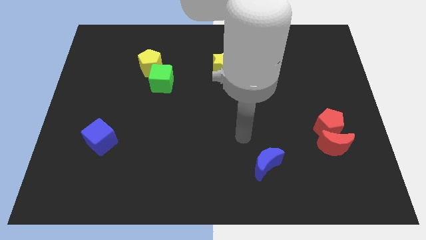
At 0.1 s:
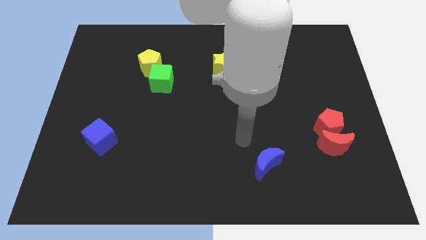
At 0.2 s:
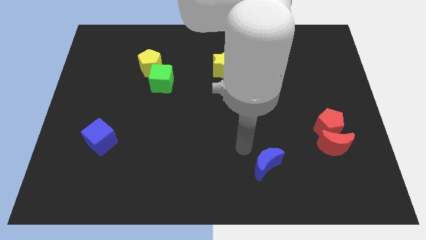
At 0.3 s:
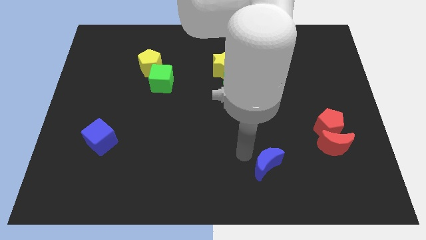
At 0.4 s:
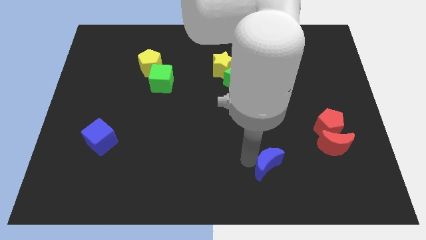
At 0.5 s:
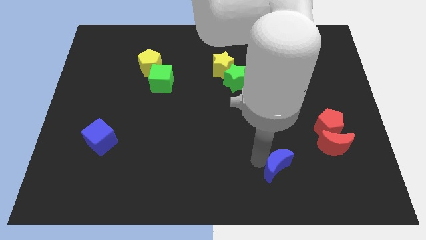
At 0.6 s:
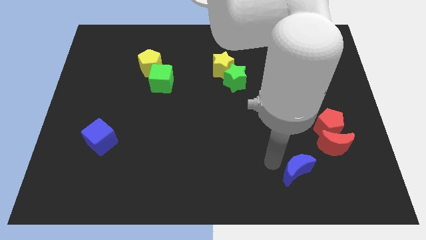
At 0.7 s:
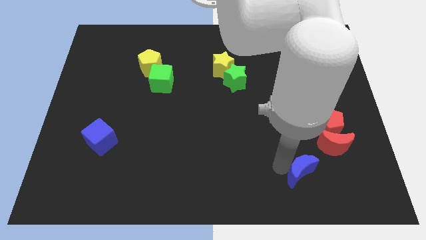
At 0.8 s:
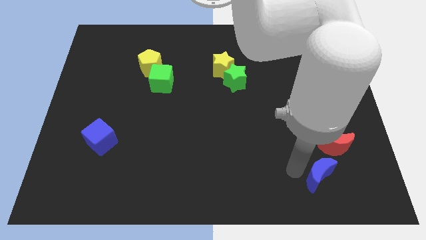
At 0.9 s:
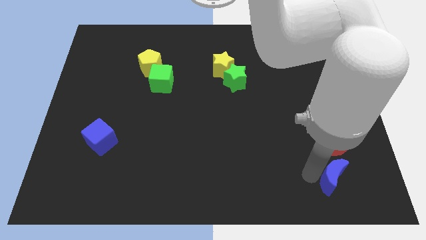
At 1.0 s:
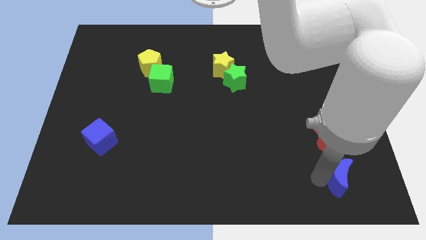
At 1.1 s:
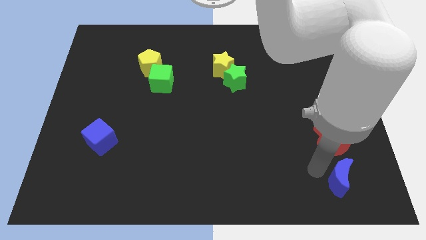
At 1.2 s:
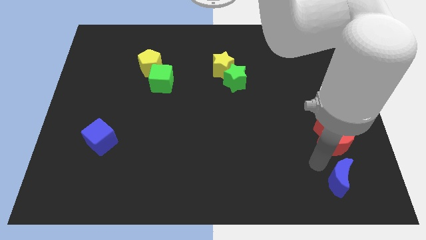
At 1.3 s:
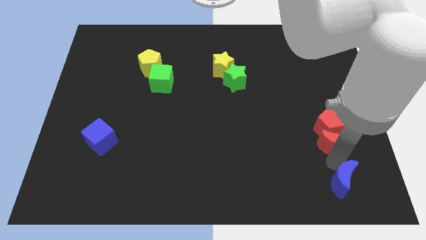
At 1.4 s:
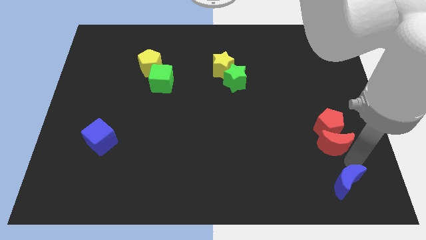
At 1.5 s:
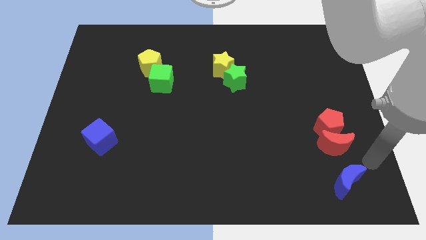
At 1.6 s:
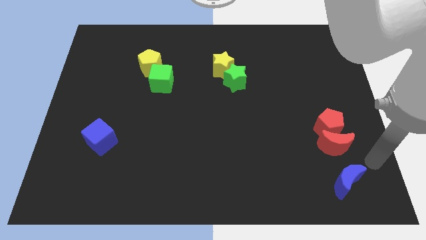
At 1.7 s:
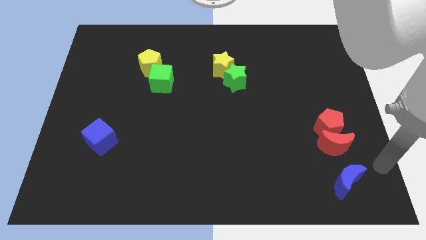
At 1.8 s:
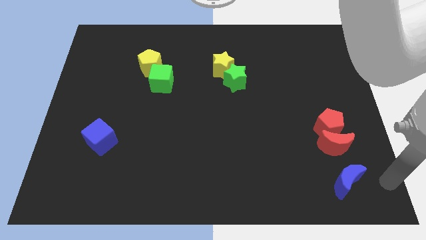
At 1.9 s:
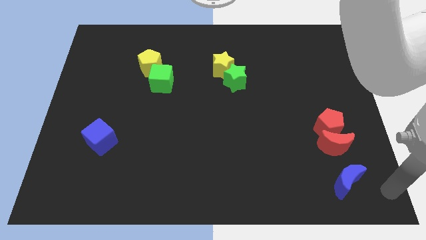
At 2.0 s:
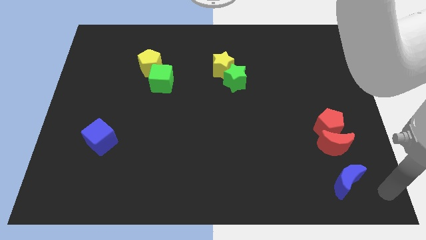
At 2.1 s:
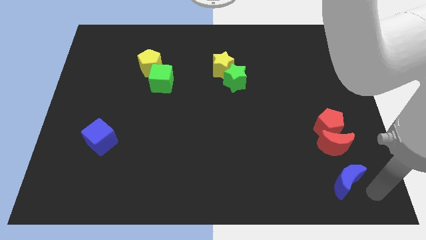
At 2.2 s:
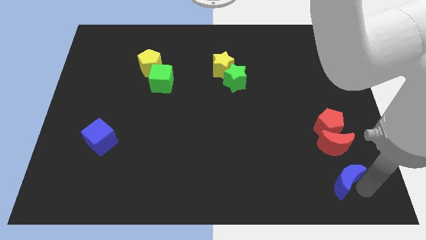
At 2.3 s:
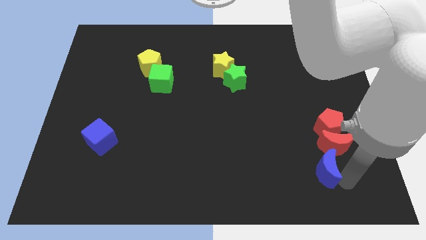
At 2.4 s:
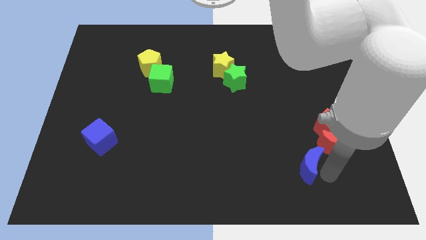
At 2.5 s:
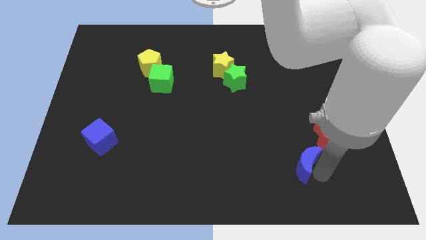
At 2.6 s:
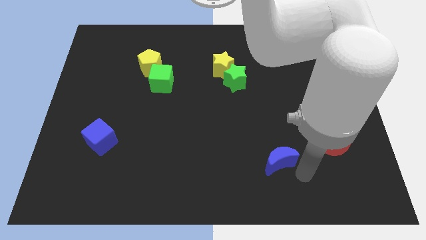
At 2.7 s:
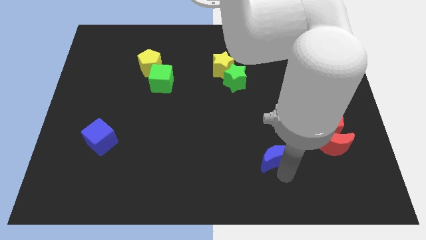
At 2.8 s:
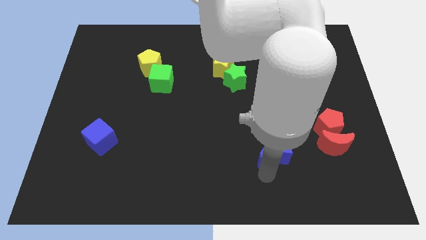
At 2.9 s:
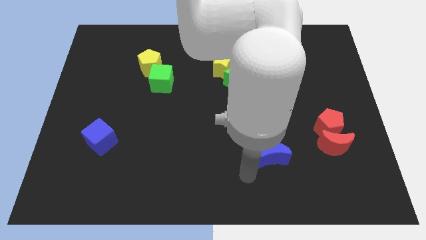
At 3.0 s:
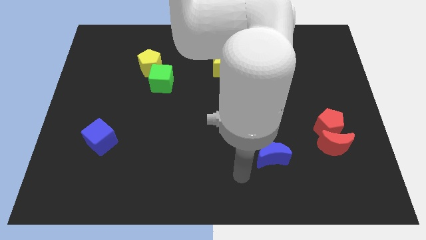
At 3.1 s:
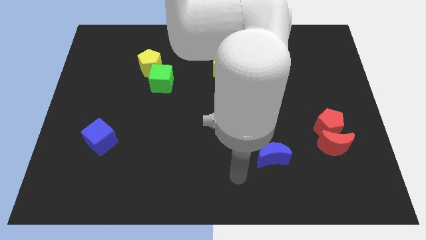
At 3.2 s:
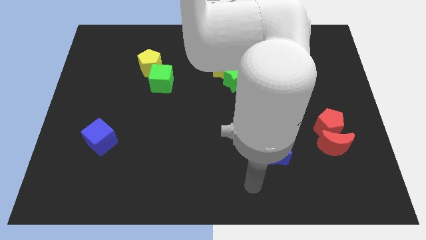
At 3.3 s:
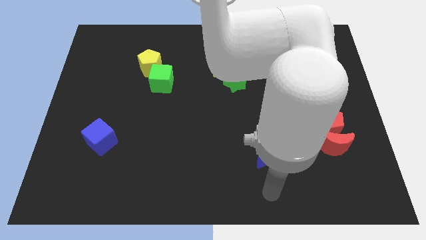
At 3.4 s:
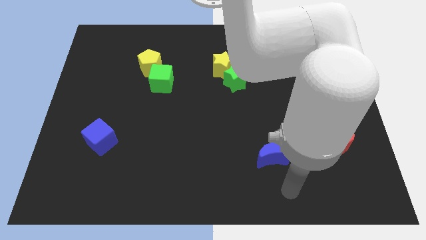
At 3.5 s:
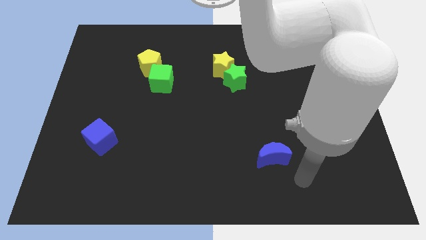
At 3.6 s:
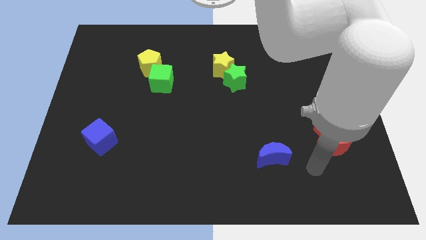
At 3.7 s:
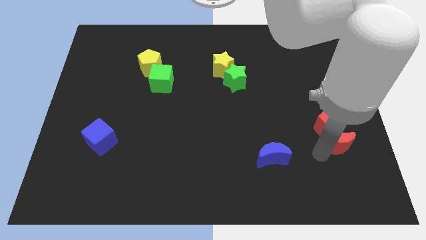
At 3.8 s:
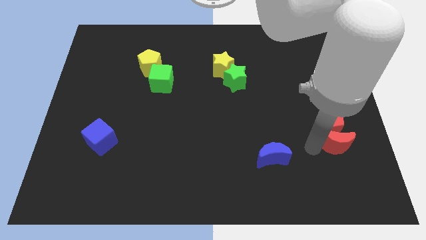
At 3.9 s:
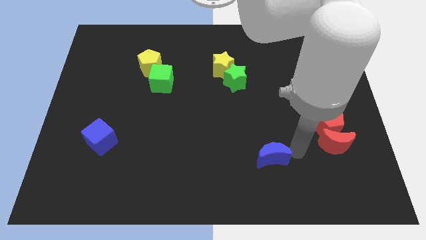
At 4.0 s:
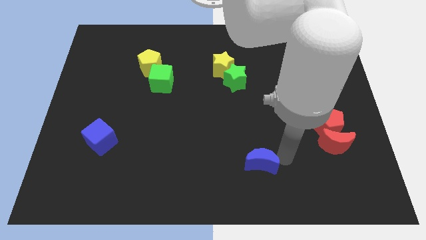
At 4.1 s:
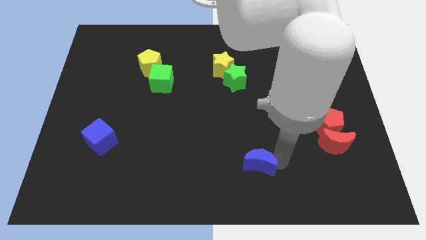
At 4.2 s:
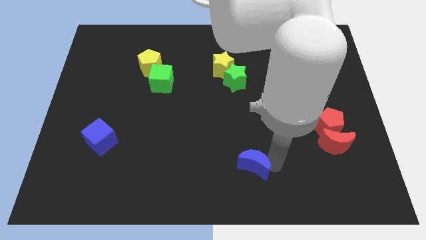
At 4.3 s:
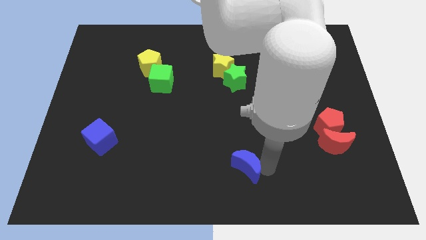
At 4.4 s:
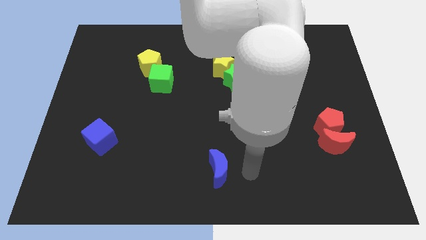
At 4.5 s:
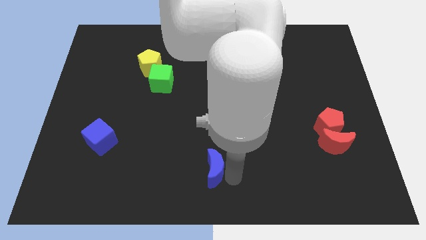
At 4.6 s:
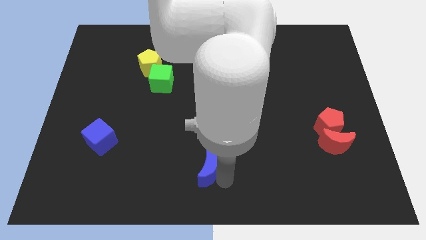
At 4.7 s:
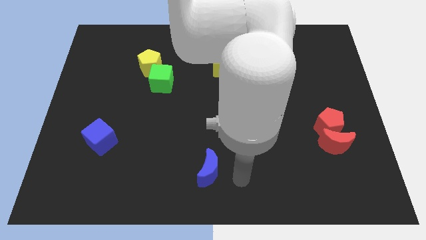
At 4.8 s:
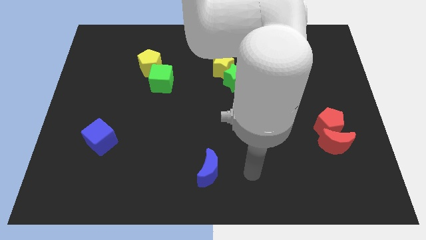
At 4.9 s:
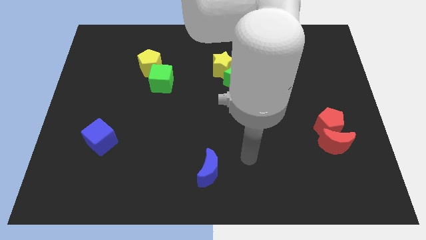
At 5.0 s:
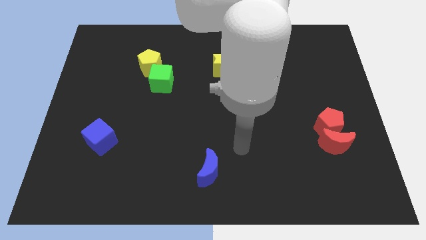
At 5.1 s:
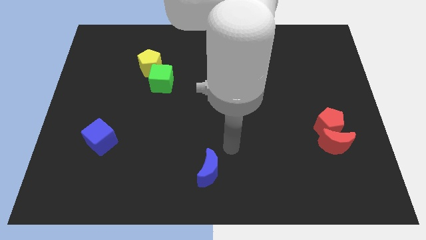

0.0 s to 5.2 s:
push the blue crescent towards the blue cube

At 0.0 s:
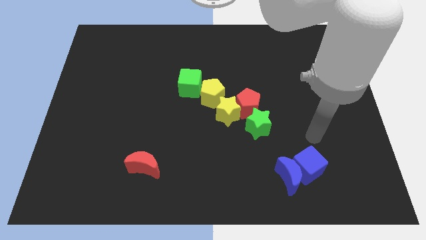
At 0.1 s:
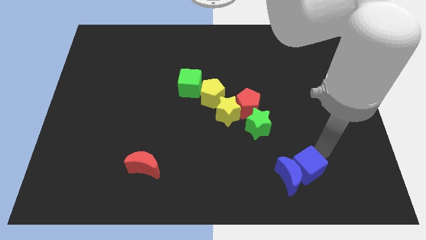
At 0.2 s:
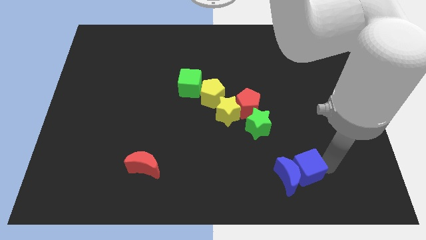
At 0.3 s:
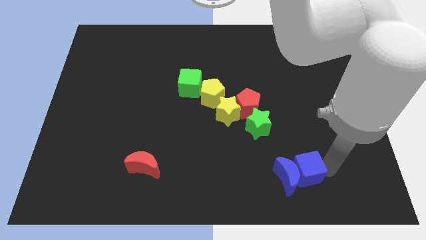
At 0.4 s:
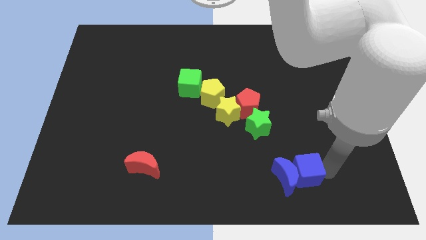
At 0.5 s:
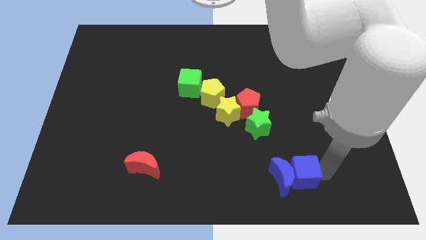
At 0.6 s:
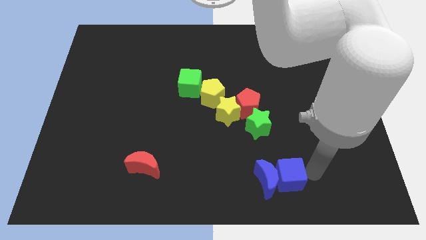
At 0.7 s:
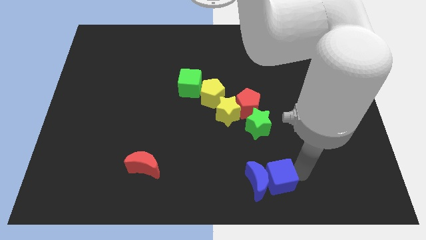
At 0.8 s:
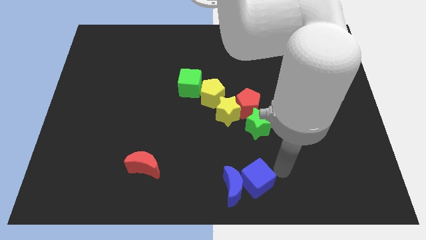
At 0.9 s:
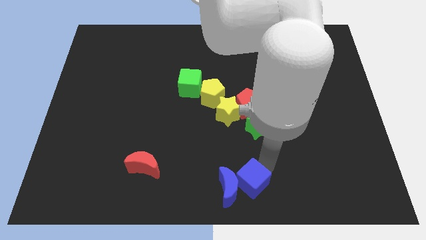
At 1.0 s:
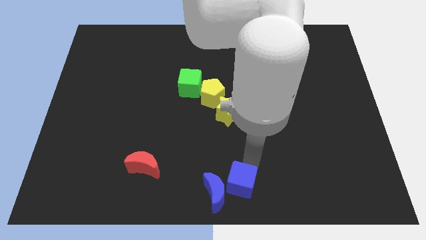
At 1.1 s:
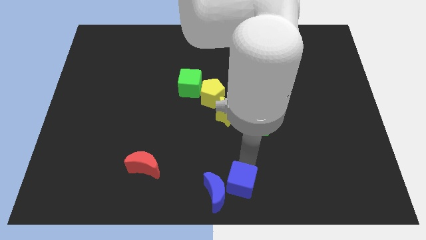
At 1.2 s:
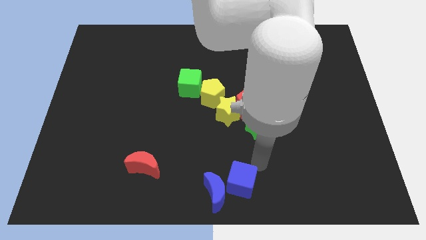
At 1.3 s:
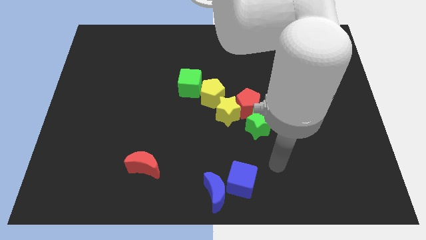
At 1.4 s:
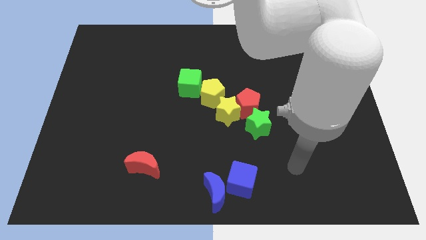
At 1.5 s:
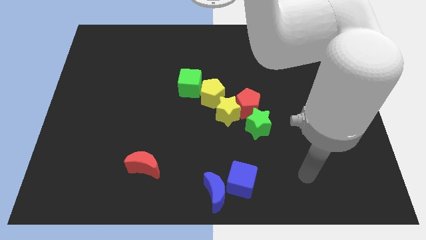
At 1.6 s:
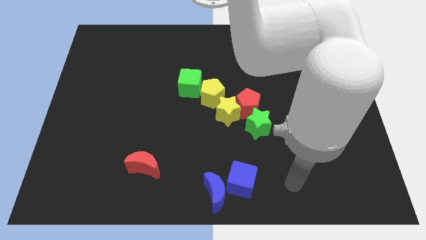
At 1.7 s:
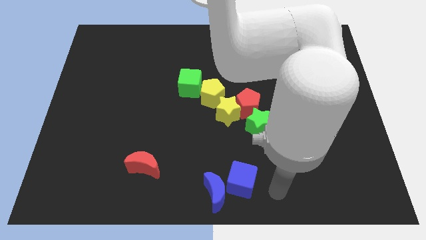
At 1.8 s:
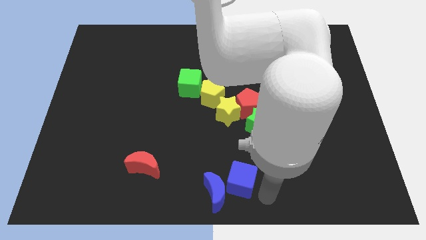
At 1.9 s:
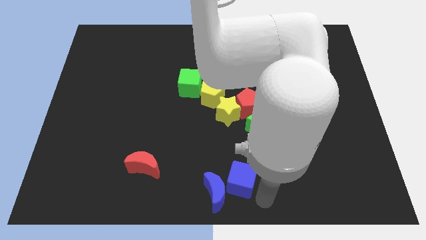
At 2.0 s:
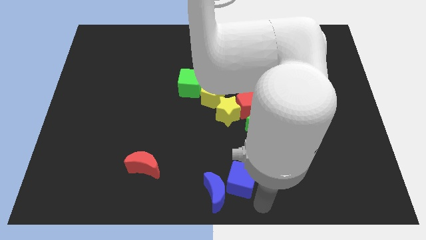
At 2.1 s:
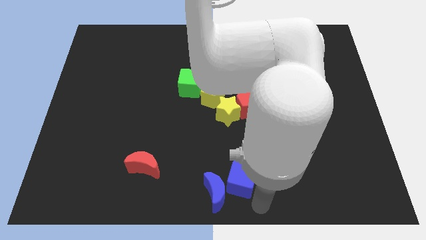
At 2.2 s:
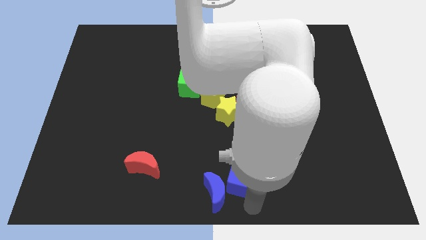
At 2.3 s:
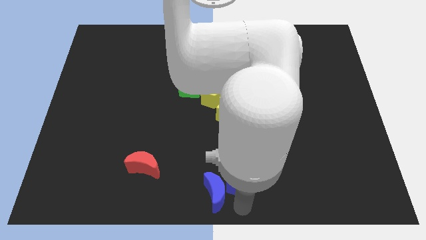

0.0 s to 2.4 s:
move the blue blocks to the bottom center of the board

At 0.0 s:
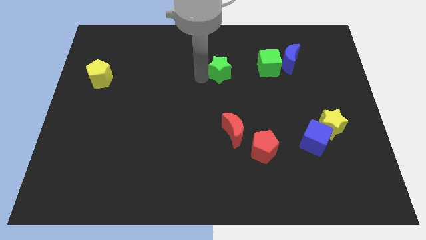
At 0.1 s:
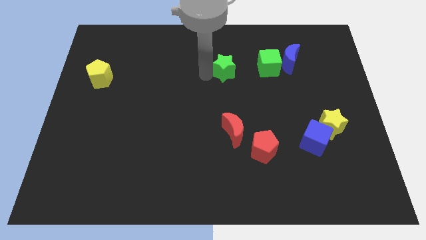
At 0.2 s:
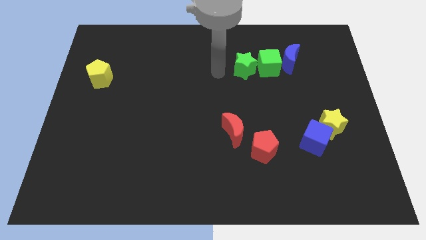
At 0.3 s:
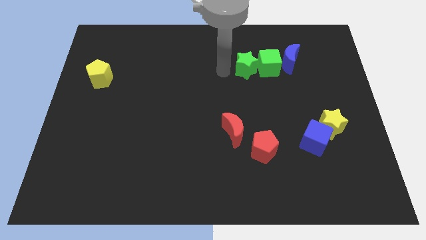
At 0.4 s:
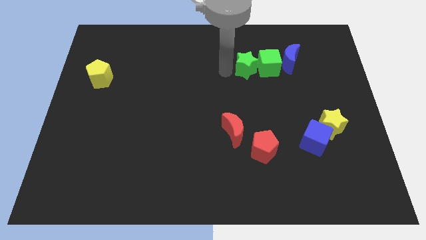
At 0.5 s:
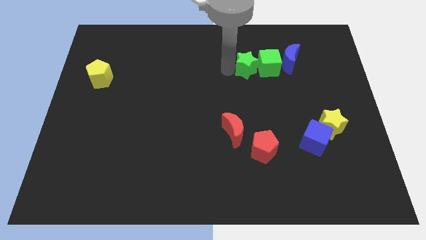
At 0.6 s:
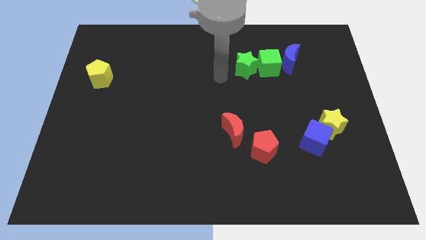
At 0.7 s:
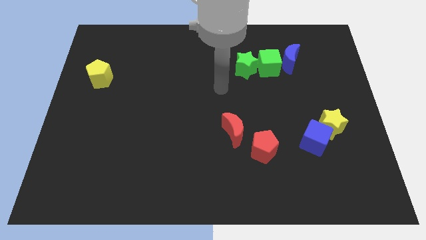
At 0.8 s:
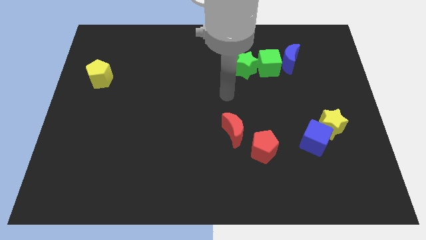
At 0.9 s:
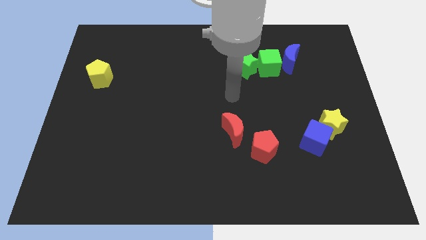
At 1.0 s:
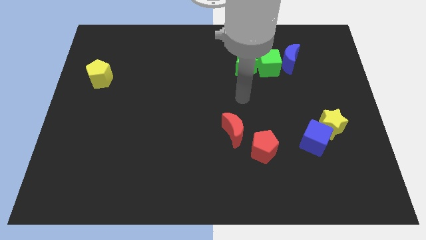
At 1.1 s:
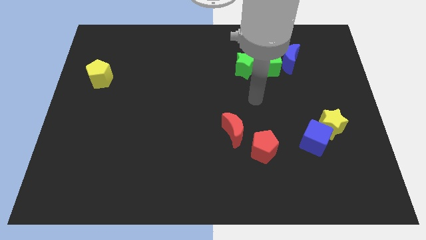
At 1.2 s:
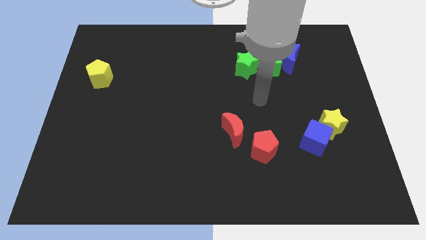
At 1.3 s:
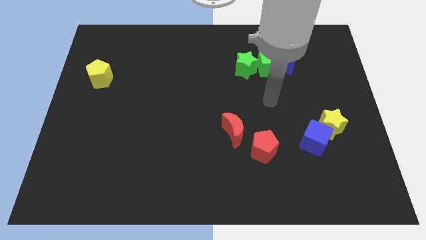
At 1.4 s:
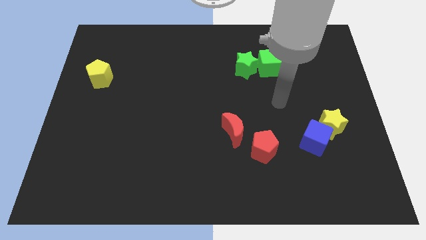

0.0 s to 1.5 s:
move green star left beside the green cube
